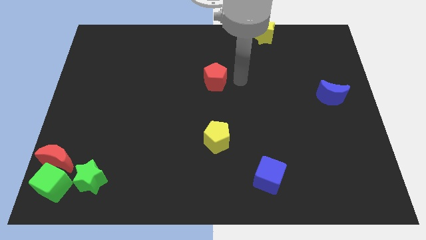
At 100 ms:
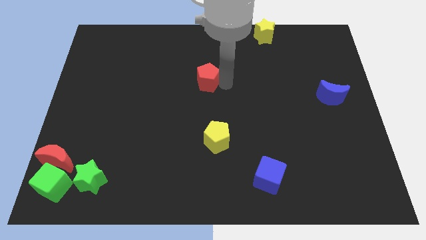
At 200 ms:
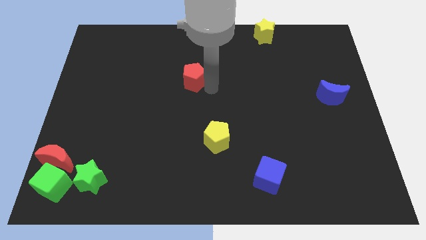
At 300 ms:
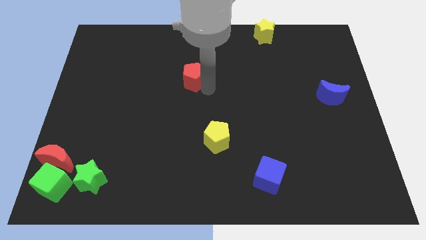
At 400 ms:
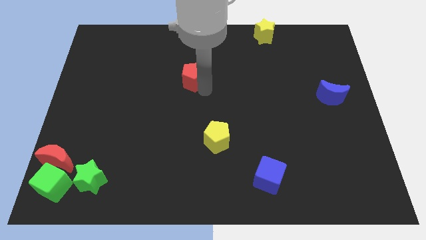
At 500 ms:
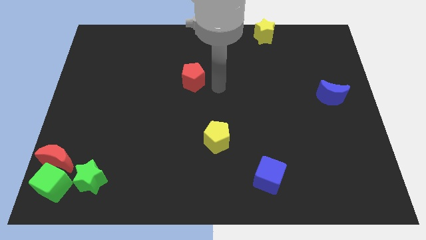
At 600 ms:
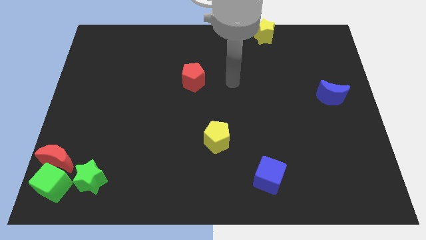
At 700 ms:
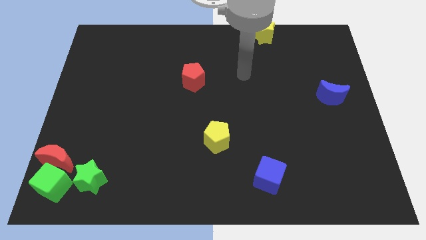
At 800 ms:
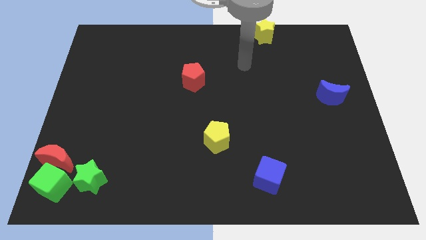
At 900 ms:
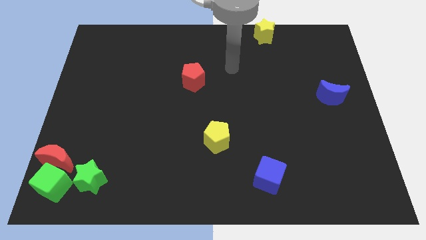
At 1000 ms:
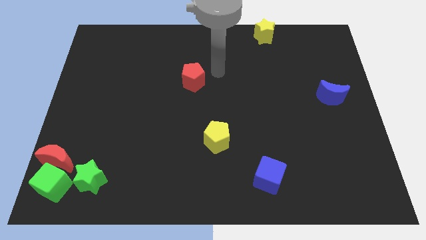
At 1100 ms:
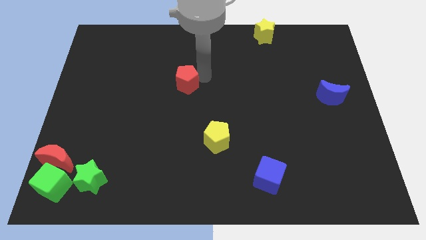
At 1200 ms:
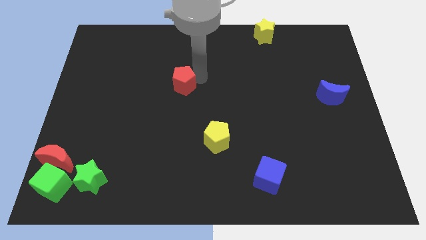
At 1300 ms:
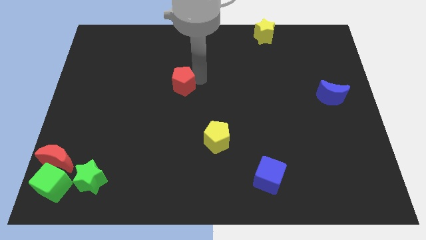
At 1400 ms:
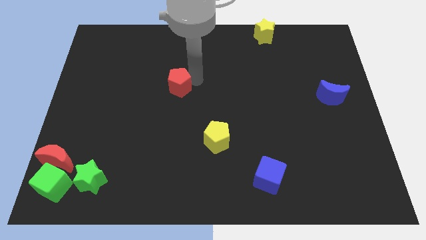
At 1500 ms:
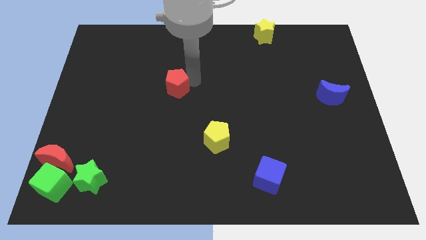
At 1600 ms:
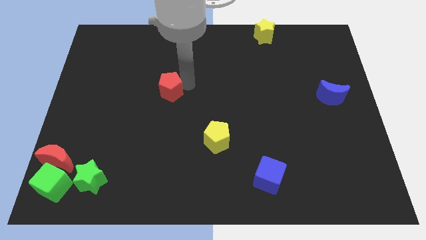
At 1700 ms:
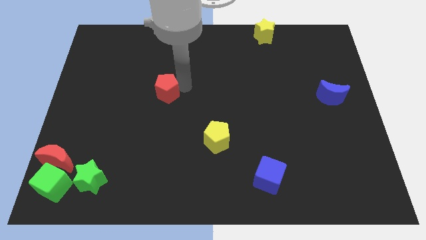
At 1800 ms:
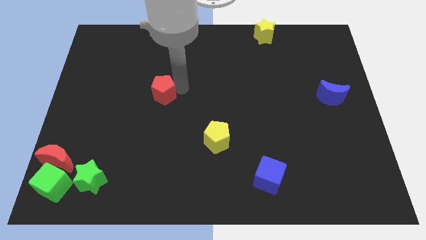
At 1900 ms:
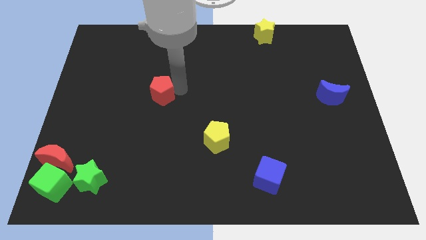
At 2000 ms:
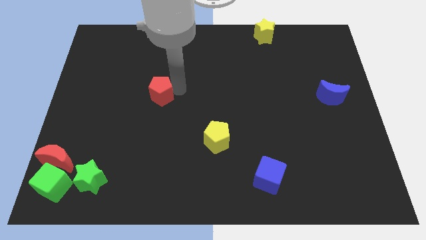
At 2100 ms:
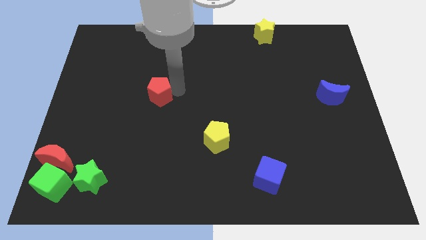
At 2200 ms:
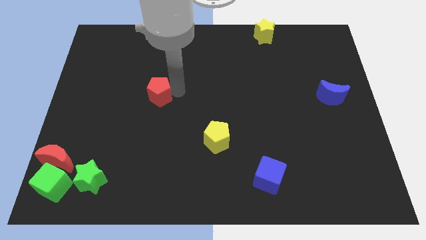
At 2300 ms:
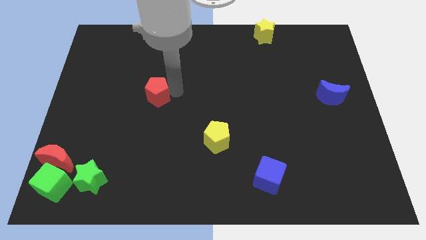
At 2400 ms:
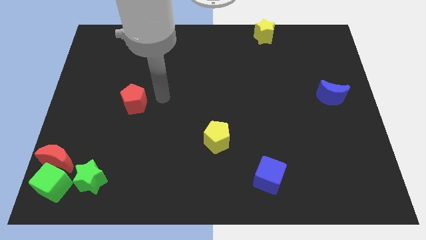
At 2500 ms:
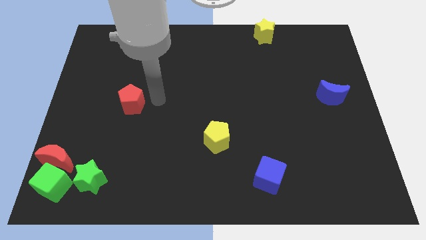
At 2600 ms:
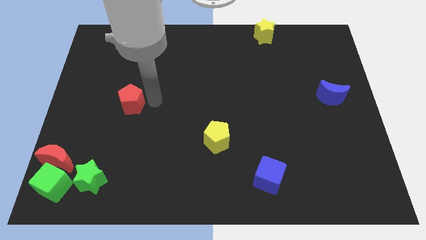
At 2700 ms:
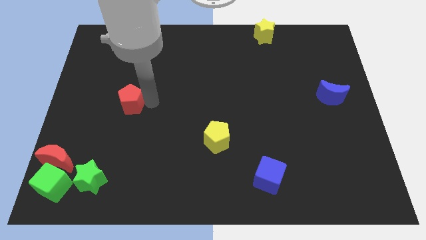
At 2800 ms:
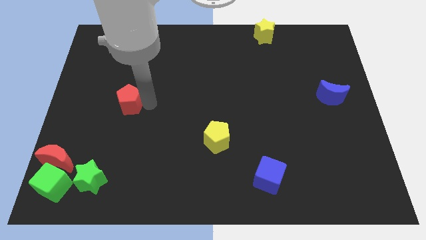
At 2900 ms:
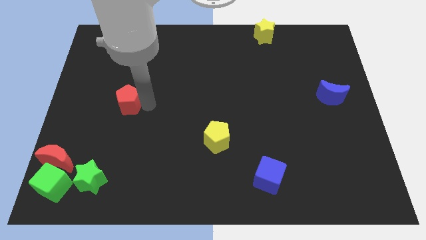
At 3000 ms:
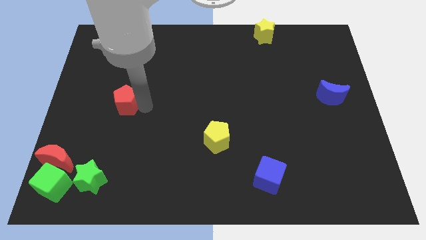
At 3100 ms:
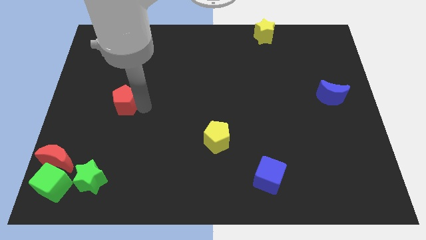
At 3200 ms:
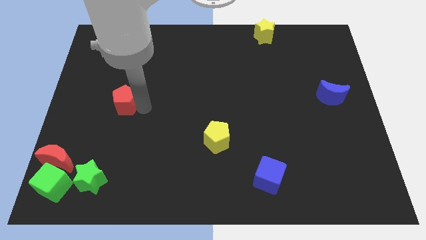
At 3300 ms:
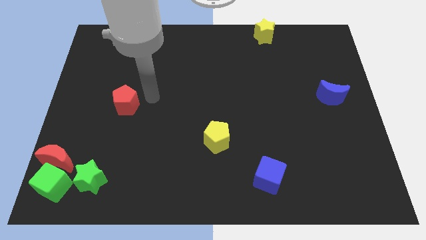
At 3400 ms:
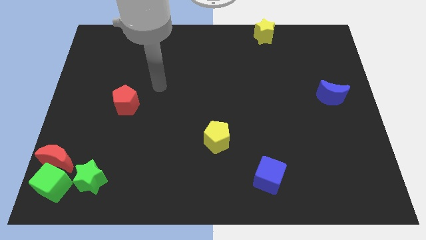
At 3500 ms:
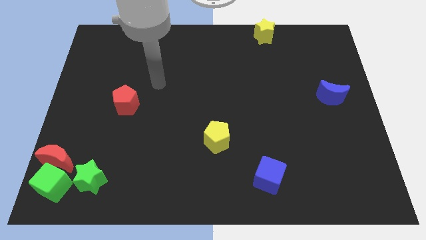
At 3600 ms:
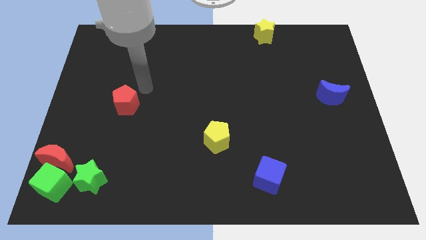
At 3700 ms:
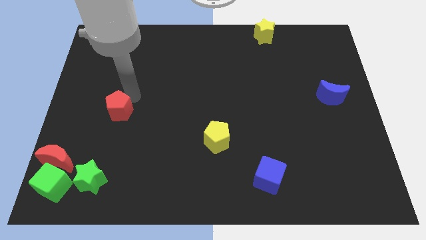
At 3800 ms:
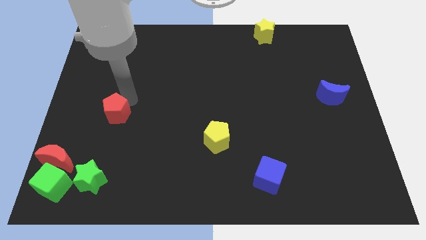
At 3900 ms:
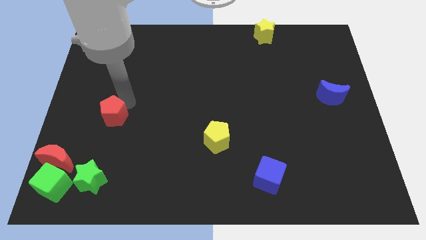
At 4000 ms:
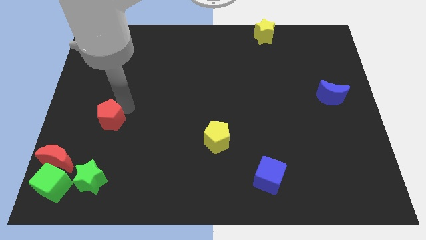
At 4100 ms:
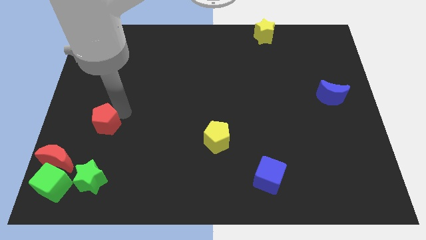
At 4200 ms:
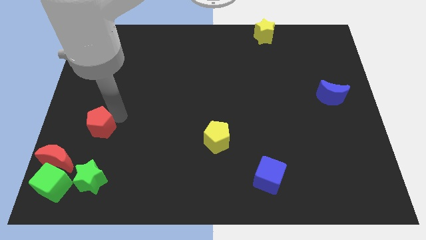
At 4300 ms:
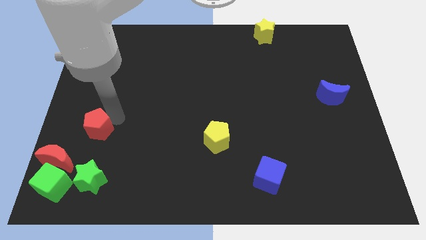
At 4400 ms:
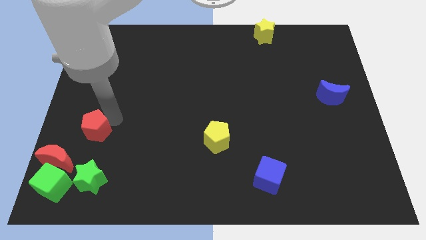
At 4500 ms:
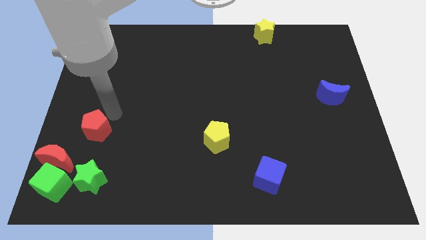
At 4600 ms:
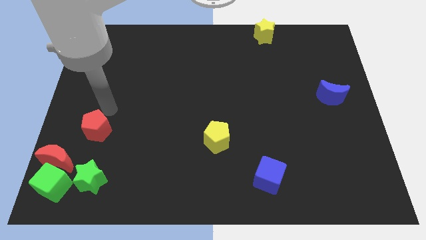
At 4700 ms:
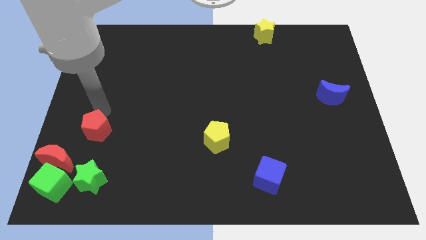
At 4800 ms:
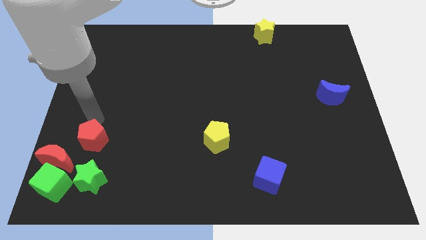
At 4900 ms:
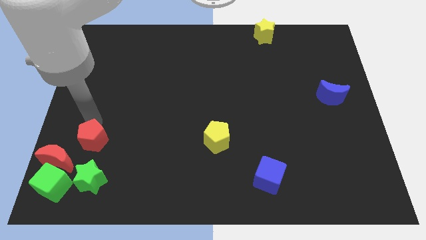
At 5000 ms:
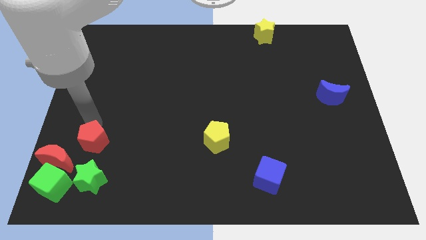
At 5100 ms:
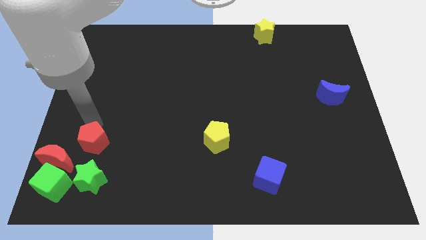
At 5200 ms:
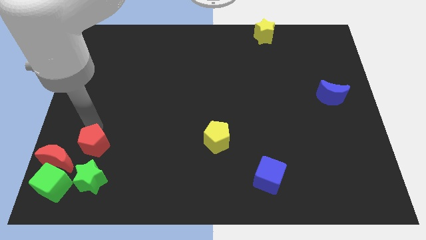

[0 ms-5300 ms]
move the red pentagon above the green star

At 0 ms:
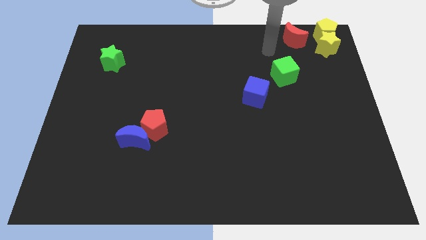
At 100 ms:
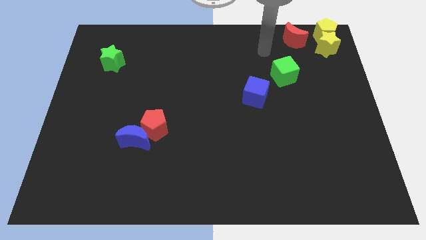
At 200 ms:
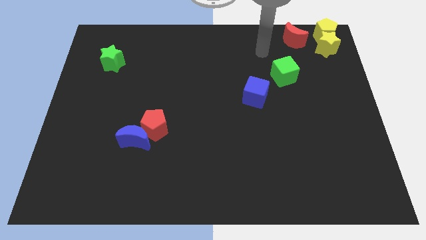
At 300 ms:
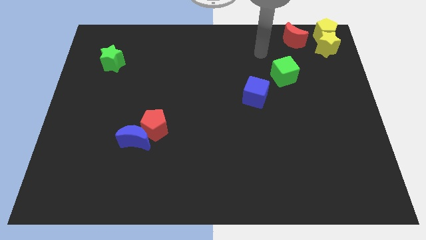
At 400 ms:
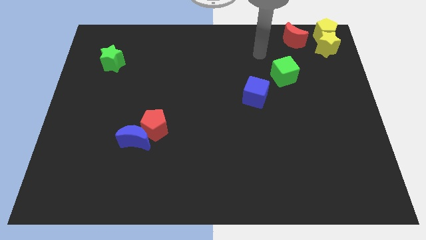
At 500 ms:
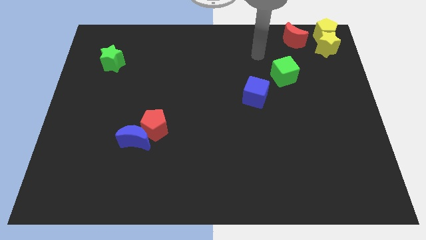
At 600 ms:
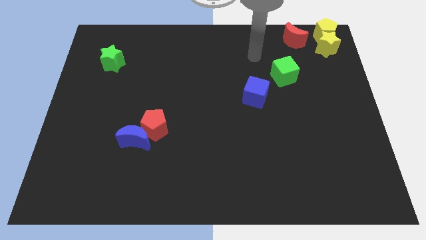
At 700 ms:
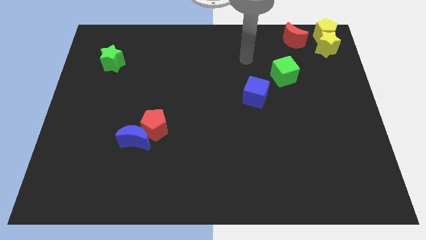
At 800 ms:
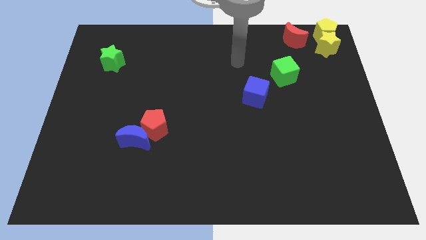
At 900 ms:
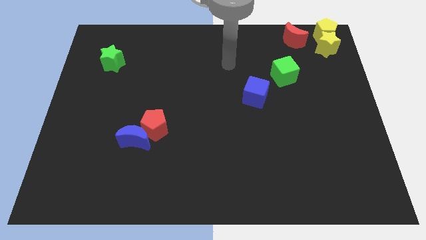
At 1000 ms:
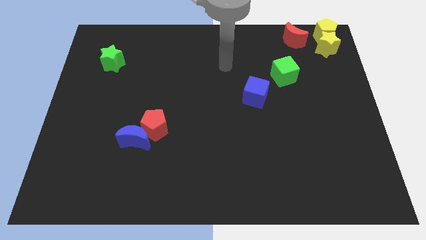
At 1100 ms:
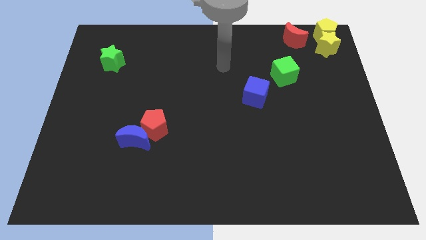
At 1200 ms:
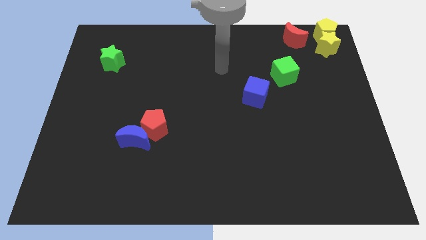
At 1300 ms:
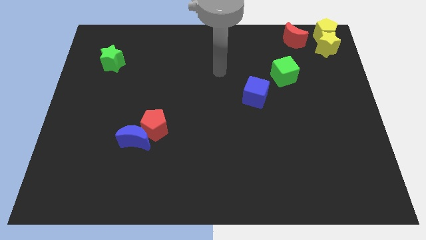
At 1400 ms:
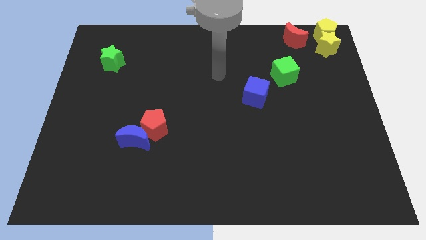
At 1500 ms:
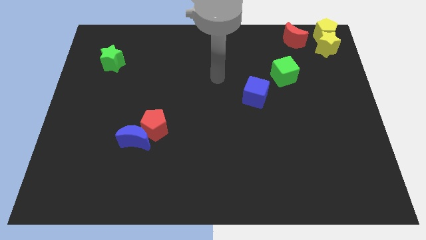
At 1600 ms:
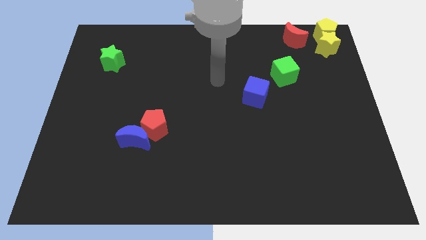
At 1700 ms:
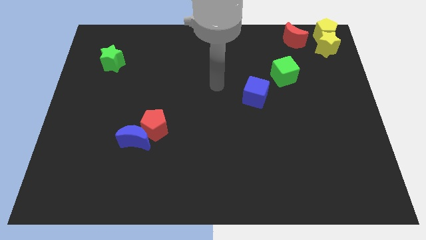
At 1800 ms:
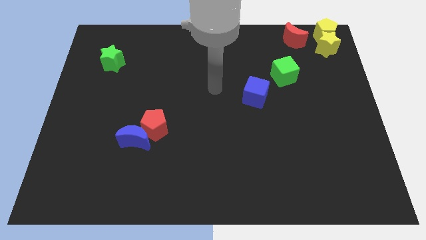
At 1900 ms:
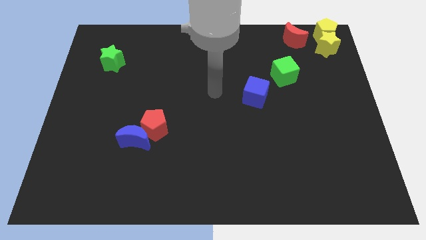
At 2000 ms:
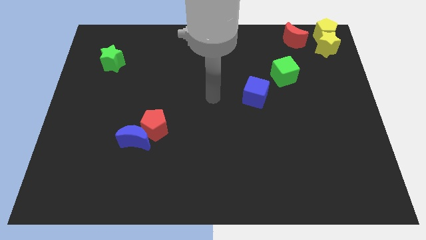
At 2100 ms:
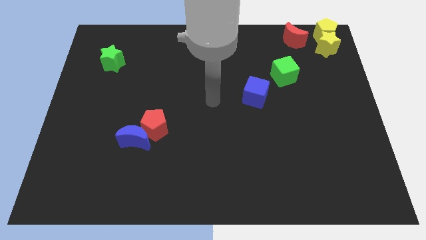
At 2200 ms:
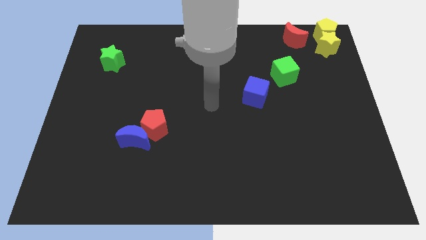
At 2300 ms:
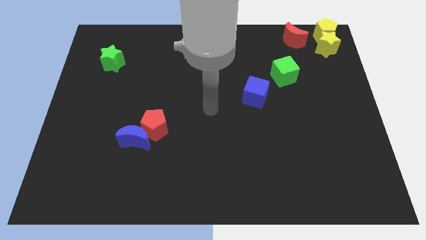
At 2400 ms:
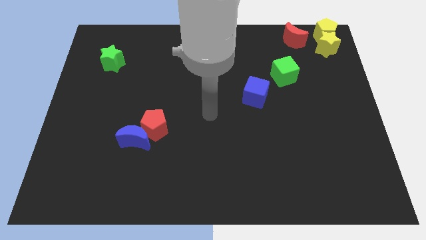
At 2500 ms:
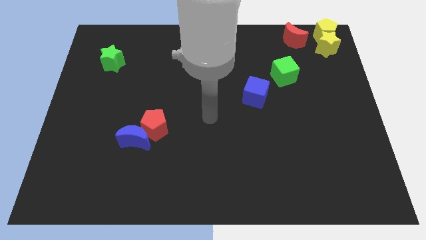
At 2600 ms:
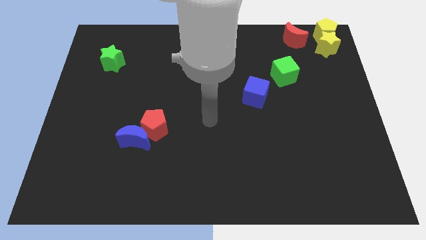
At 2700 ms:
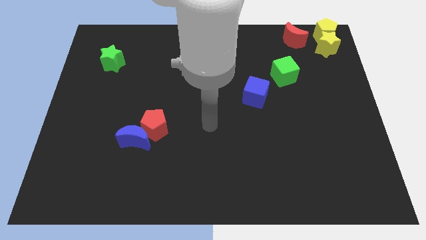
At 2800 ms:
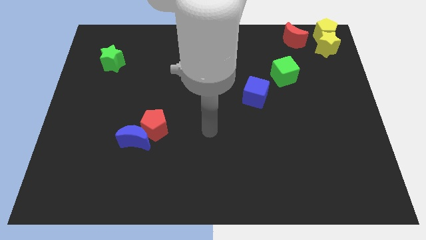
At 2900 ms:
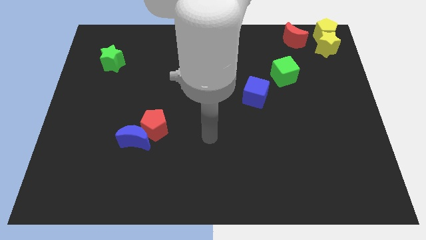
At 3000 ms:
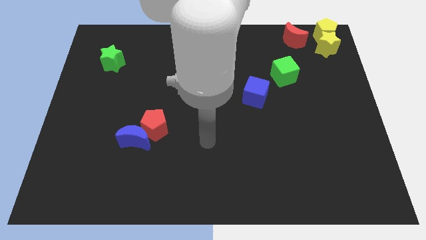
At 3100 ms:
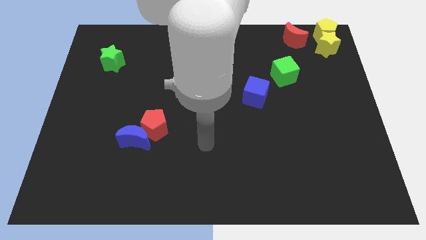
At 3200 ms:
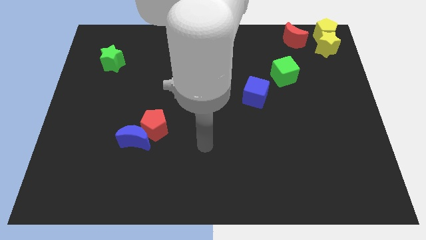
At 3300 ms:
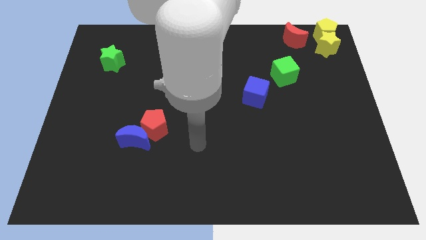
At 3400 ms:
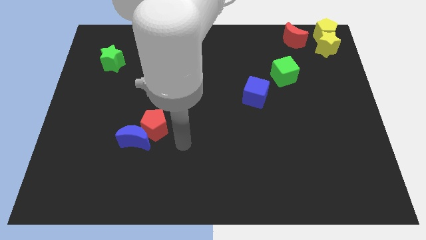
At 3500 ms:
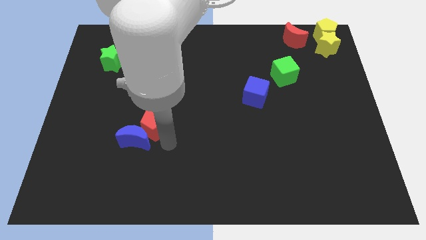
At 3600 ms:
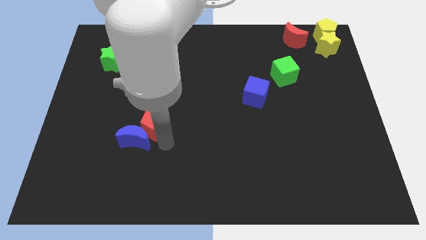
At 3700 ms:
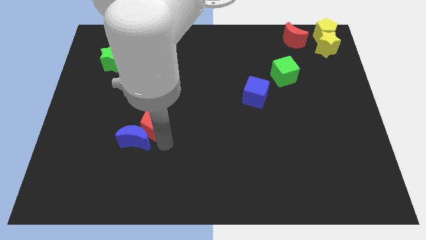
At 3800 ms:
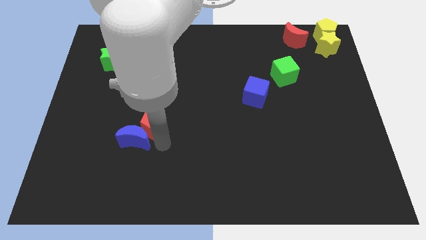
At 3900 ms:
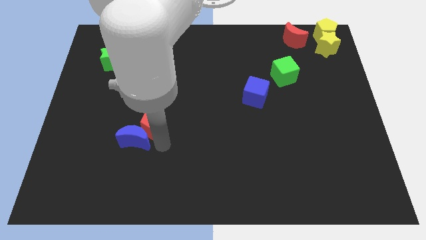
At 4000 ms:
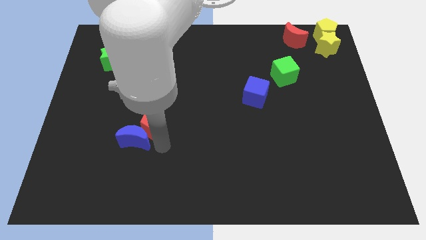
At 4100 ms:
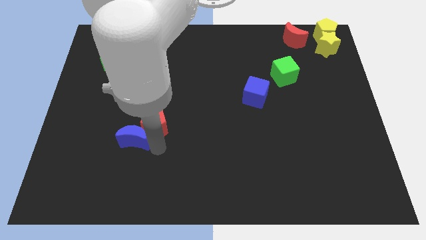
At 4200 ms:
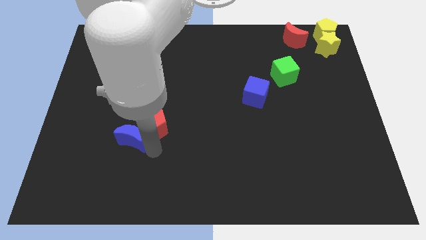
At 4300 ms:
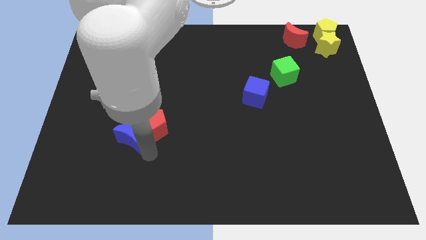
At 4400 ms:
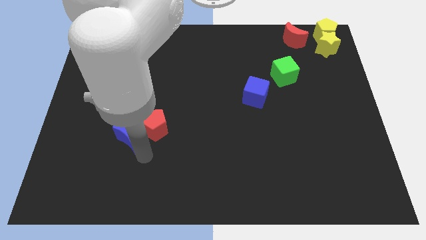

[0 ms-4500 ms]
move arm near blue moon
